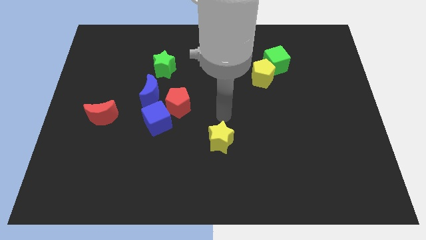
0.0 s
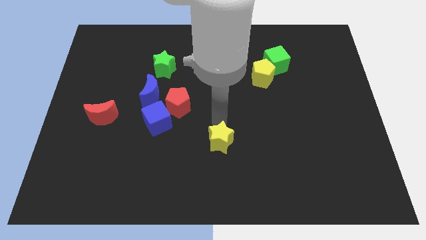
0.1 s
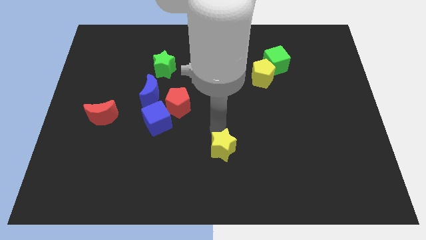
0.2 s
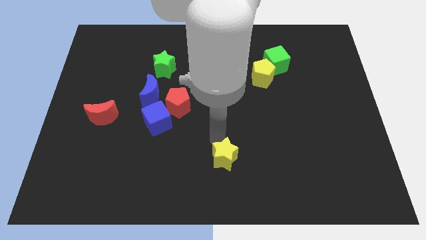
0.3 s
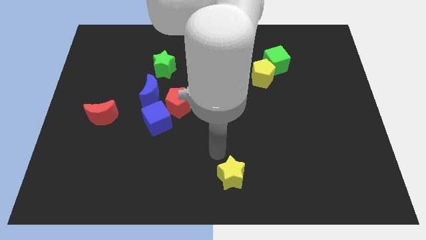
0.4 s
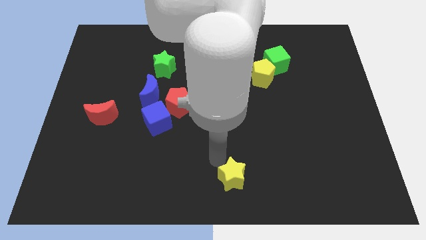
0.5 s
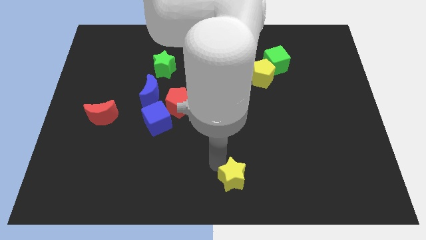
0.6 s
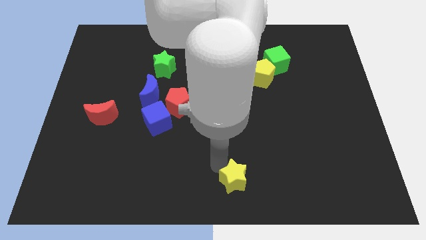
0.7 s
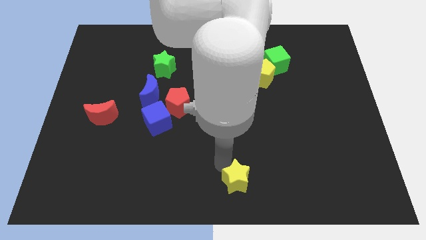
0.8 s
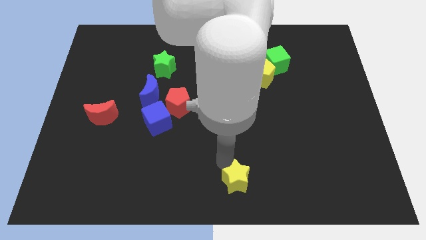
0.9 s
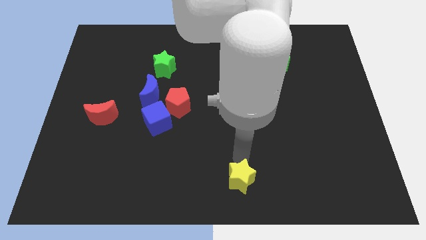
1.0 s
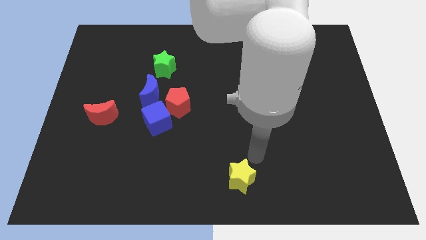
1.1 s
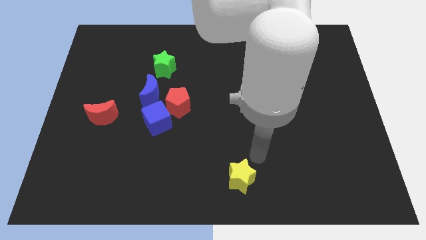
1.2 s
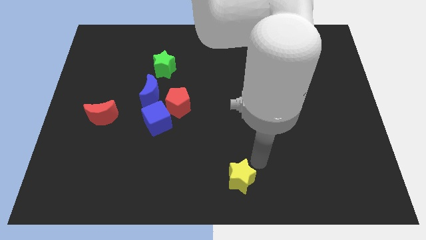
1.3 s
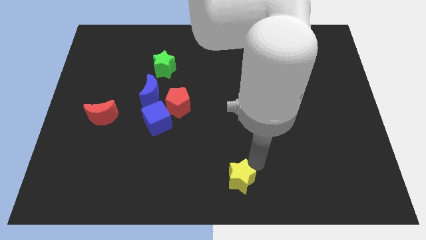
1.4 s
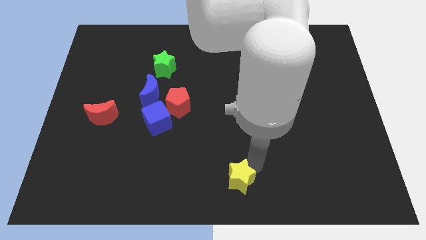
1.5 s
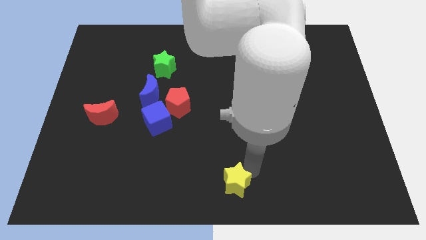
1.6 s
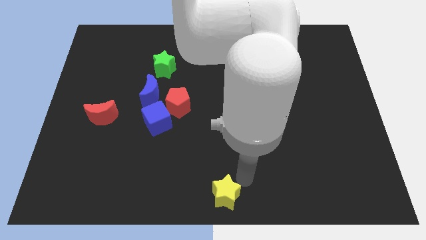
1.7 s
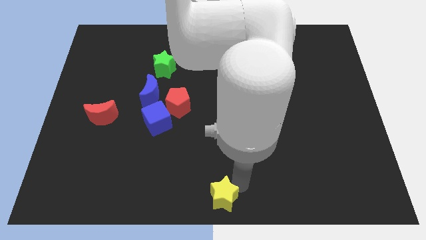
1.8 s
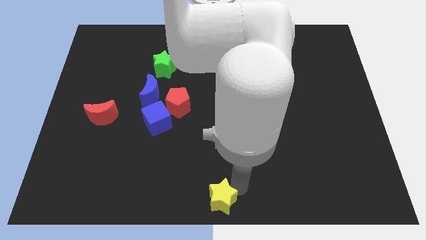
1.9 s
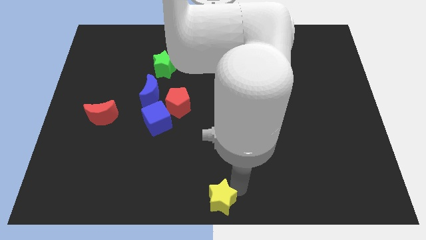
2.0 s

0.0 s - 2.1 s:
push the yellow star to the bottom center of the board

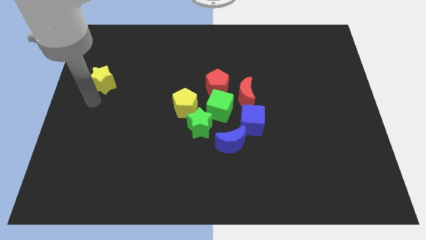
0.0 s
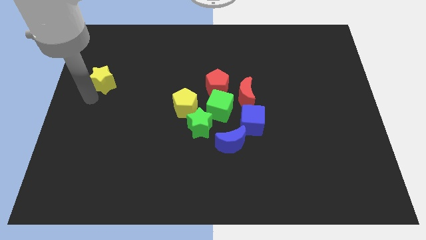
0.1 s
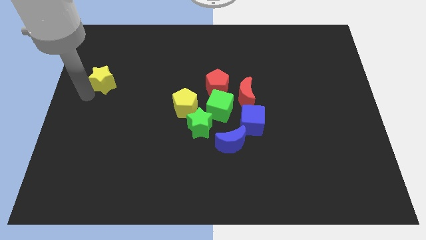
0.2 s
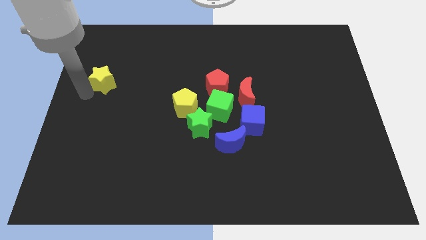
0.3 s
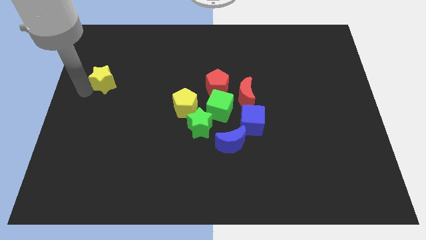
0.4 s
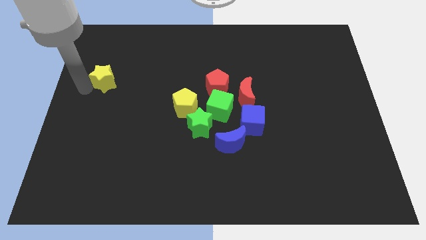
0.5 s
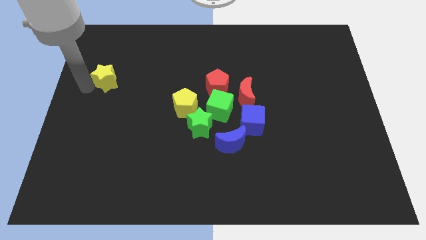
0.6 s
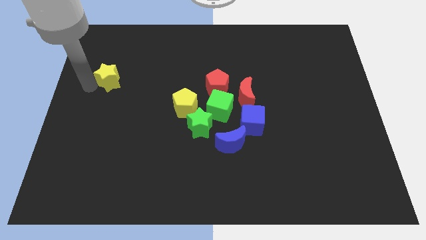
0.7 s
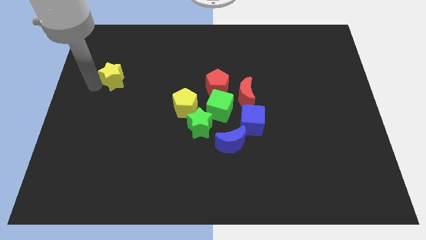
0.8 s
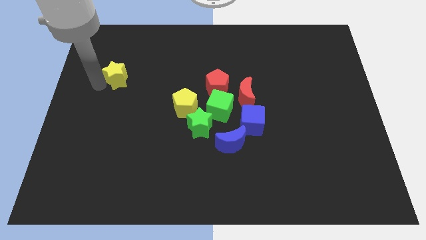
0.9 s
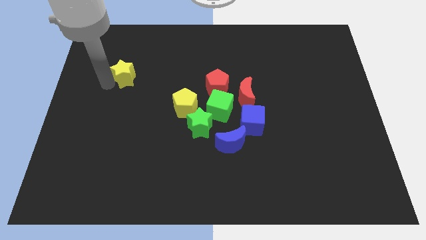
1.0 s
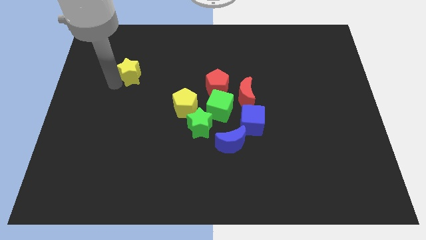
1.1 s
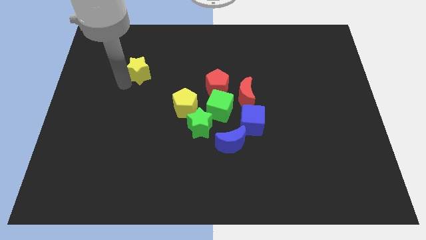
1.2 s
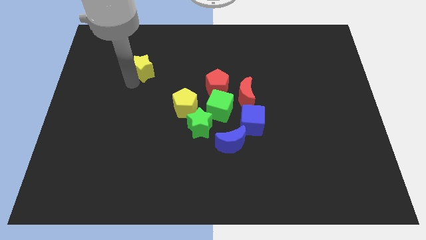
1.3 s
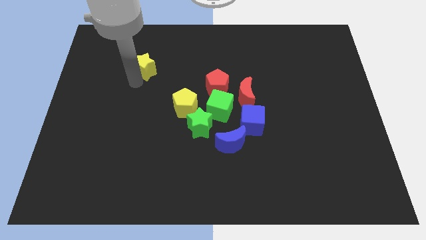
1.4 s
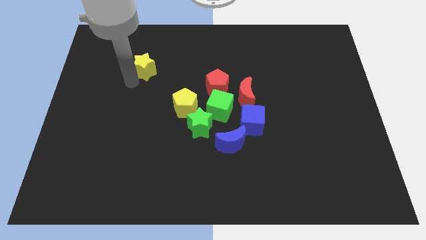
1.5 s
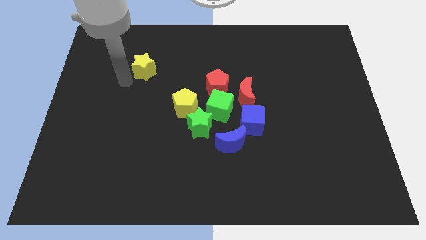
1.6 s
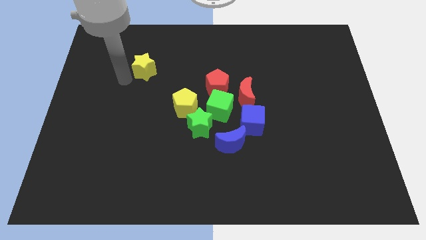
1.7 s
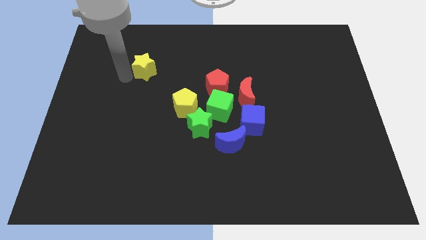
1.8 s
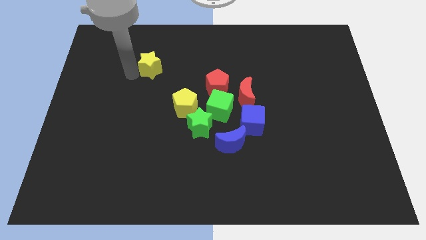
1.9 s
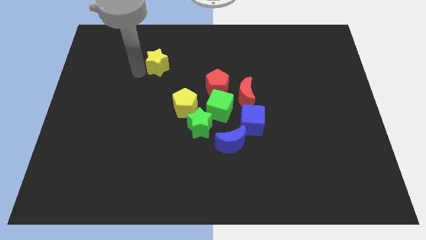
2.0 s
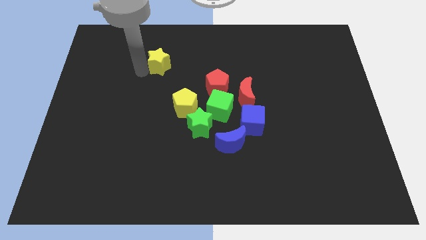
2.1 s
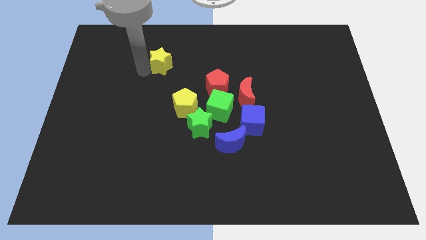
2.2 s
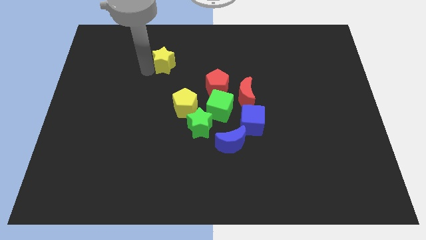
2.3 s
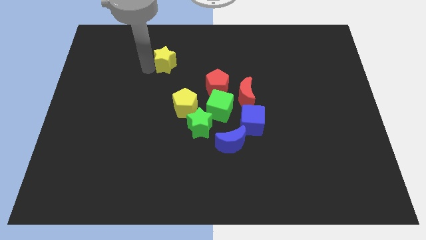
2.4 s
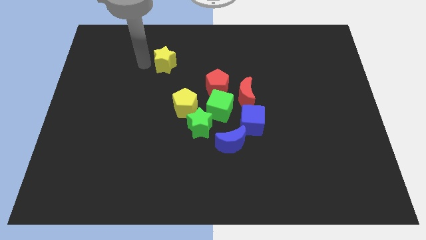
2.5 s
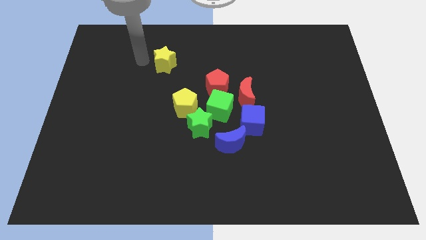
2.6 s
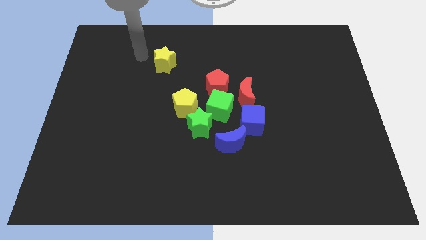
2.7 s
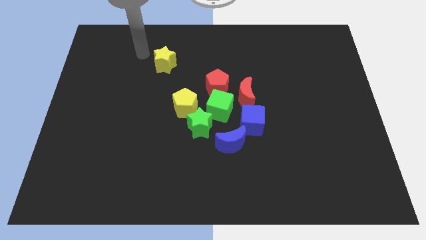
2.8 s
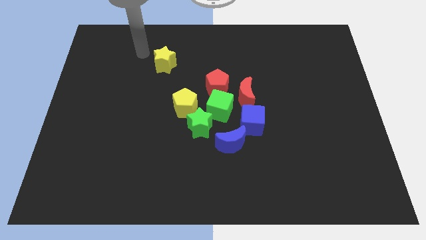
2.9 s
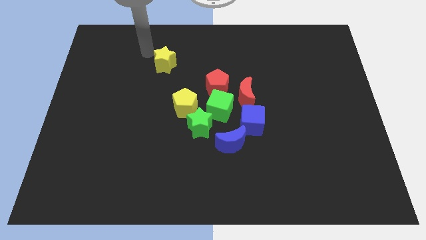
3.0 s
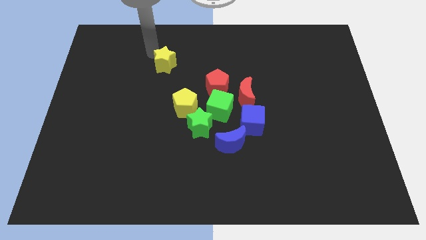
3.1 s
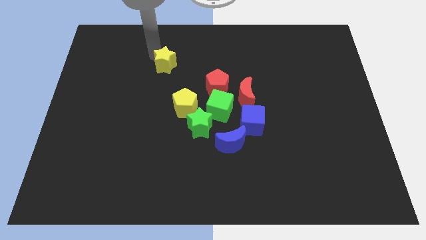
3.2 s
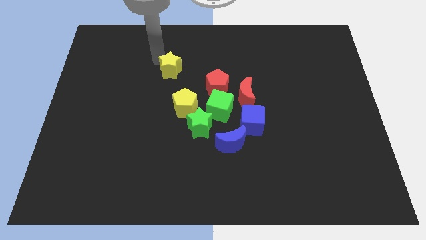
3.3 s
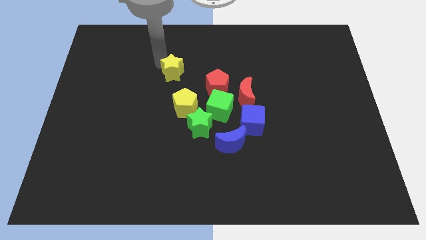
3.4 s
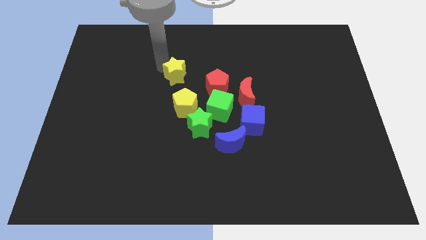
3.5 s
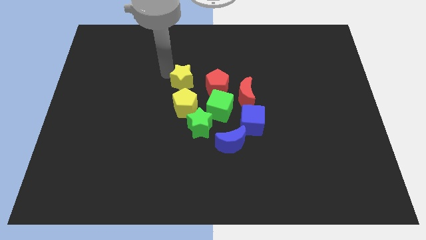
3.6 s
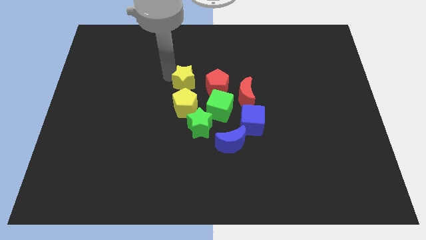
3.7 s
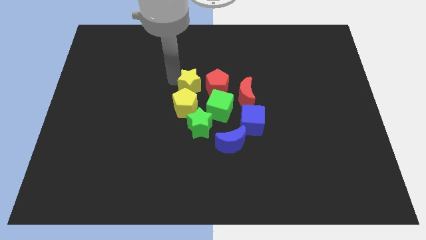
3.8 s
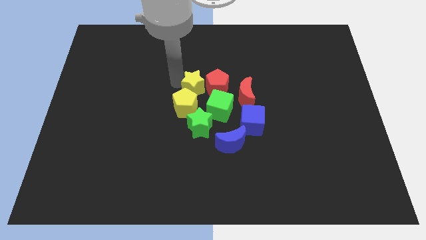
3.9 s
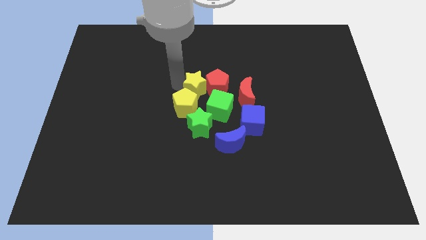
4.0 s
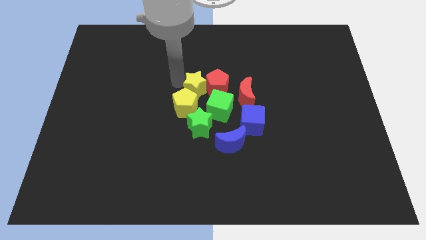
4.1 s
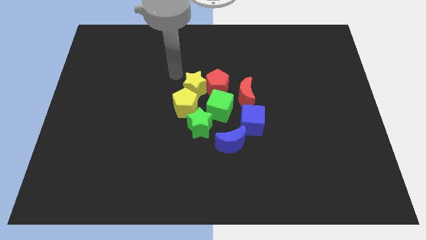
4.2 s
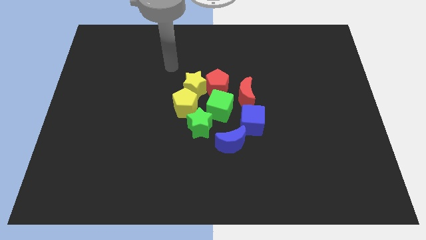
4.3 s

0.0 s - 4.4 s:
move the yellow star to the left side of the red pentagon

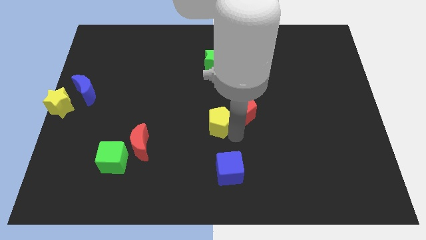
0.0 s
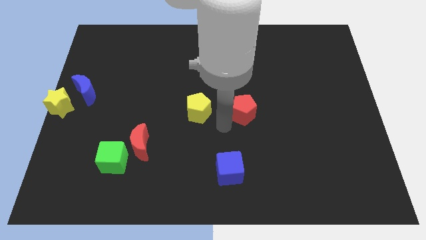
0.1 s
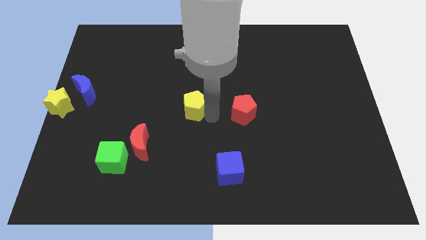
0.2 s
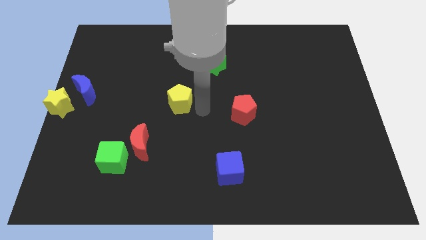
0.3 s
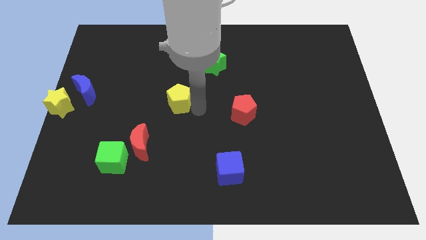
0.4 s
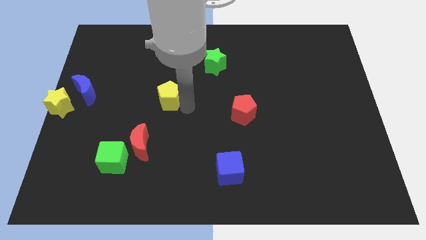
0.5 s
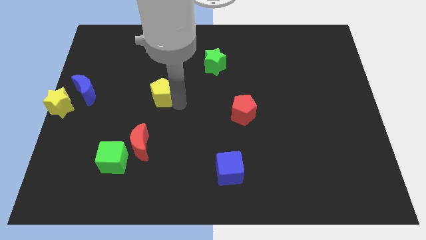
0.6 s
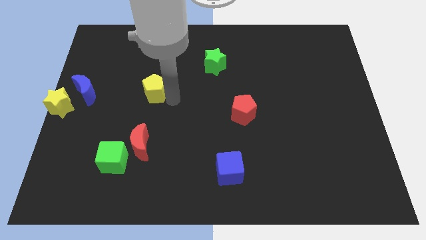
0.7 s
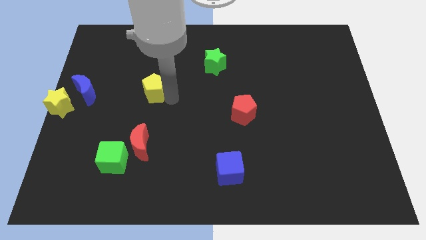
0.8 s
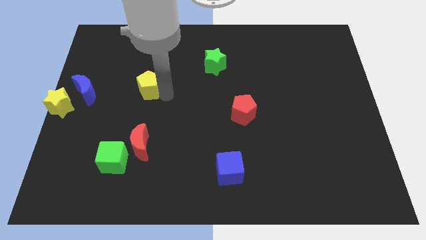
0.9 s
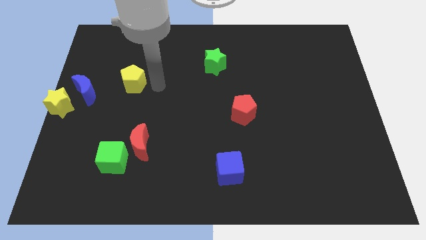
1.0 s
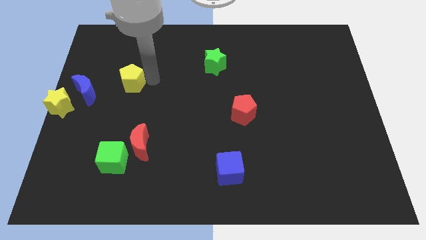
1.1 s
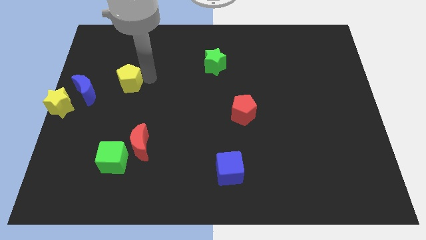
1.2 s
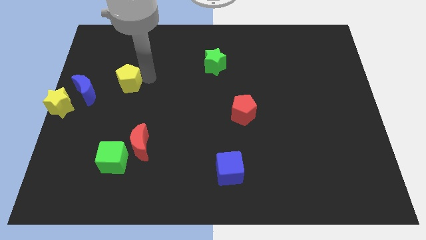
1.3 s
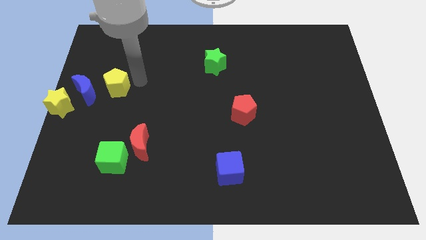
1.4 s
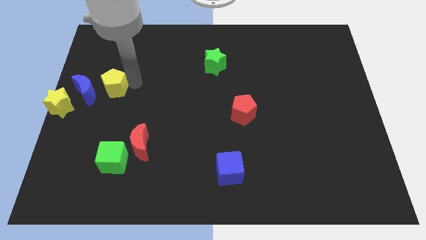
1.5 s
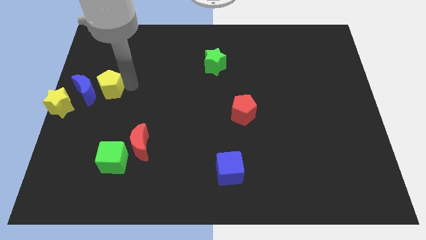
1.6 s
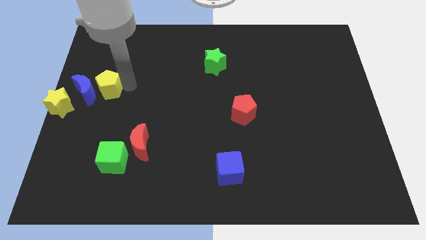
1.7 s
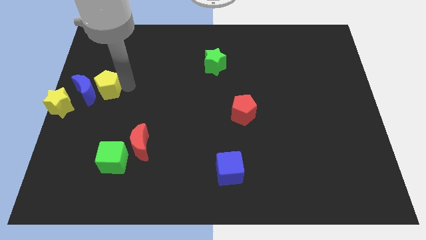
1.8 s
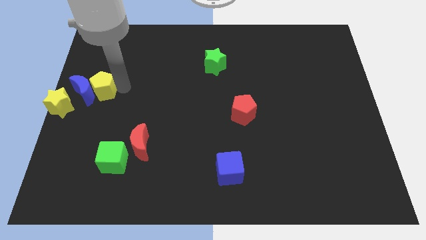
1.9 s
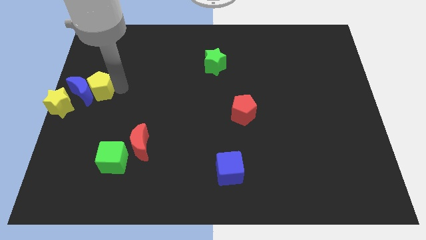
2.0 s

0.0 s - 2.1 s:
push the yellow pentagon to the right of blue crescent

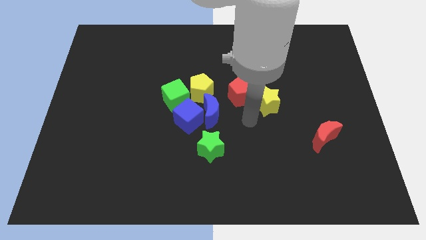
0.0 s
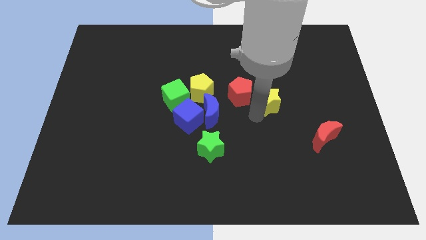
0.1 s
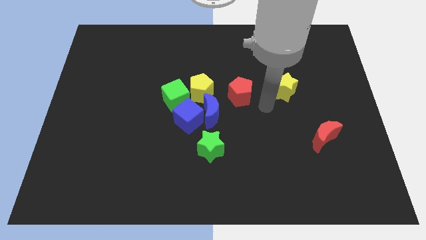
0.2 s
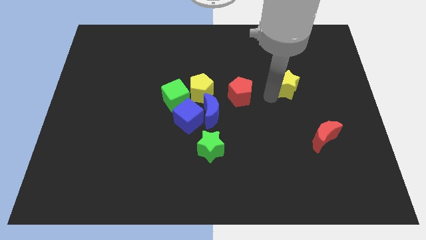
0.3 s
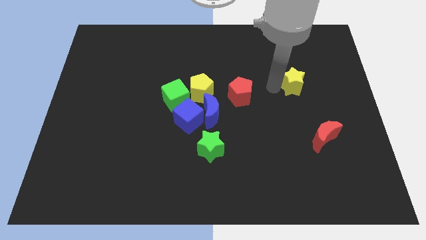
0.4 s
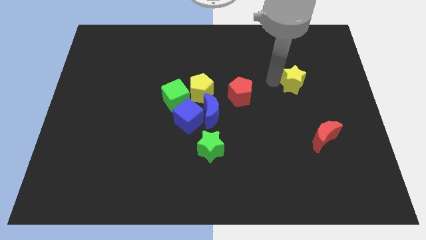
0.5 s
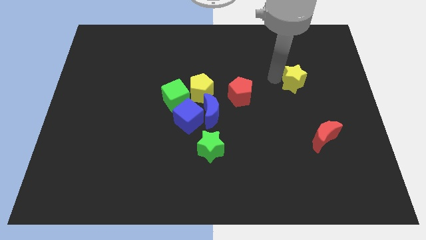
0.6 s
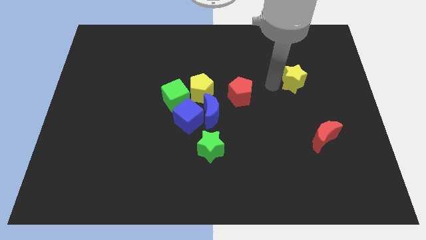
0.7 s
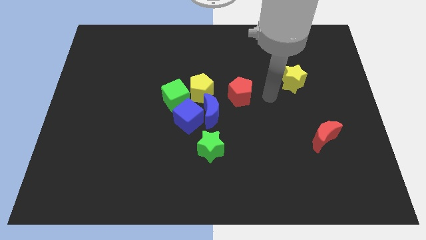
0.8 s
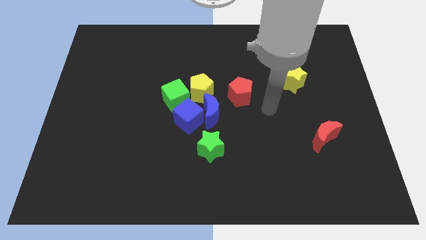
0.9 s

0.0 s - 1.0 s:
move the yellow star right to the red pentagon
